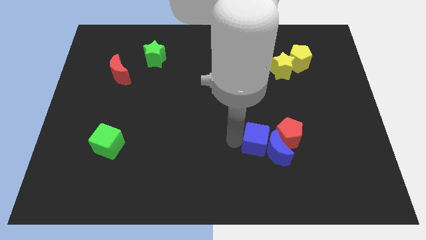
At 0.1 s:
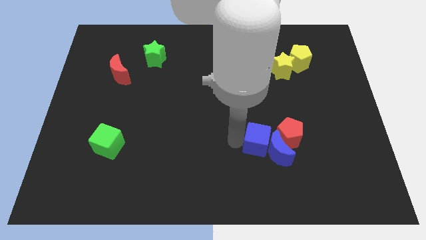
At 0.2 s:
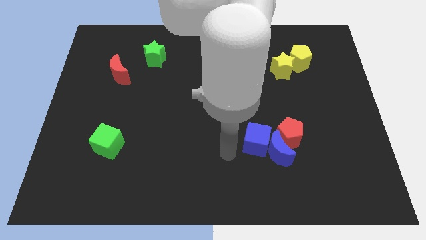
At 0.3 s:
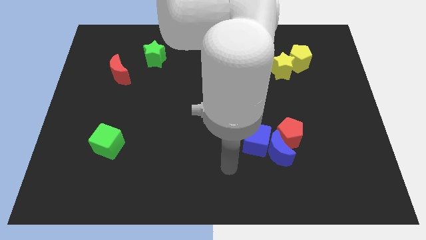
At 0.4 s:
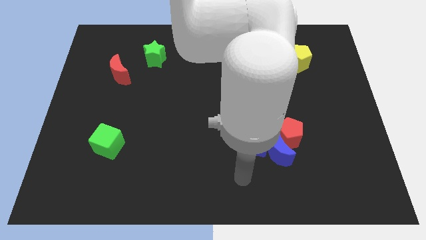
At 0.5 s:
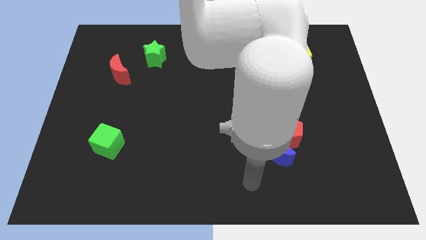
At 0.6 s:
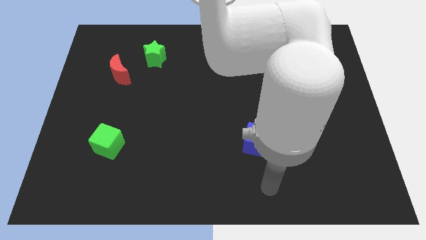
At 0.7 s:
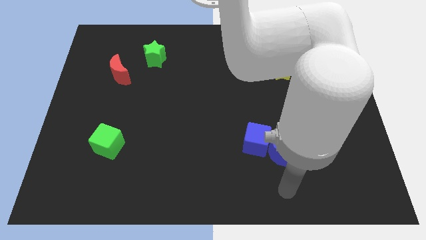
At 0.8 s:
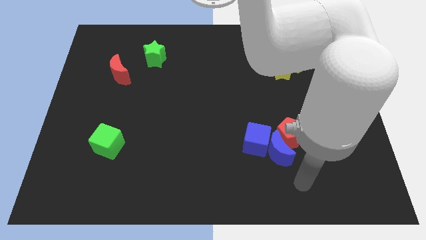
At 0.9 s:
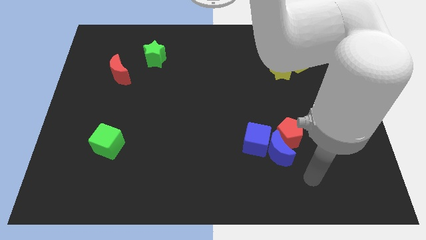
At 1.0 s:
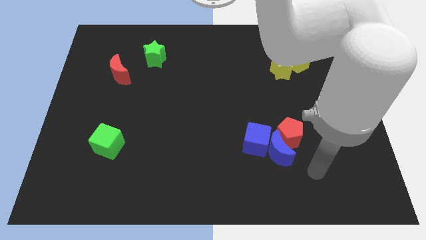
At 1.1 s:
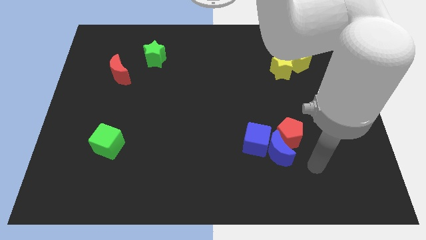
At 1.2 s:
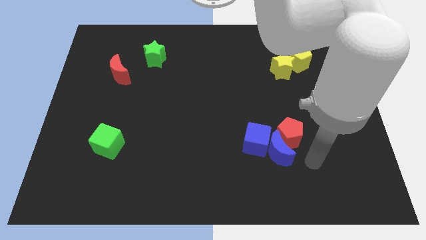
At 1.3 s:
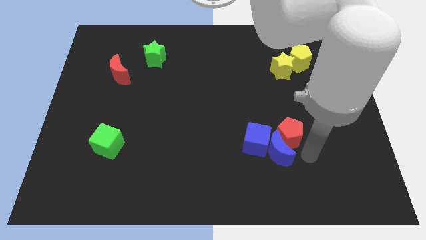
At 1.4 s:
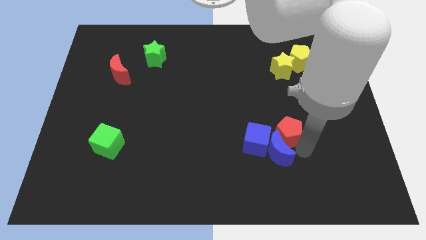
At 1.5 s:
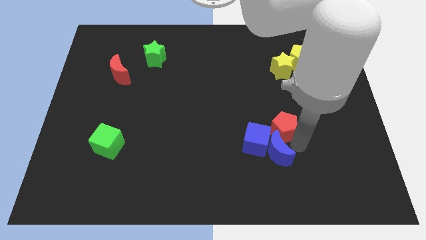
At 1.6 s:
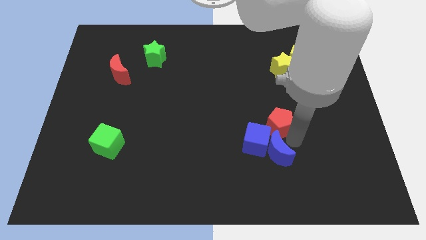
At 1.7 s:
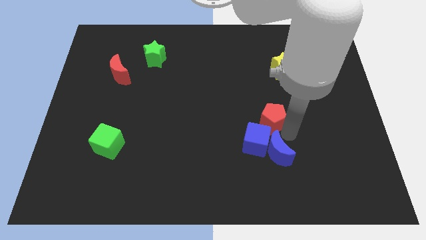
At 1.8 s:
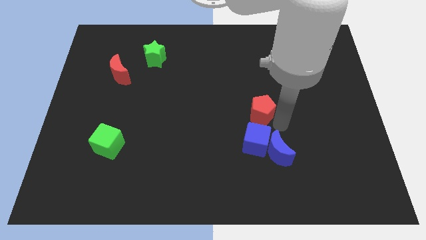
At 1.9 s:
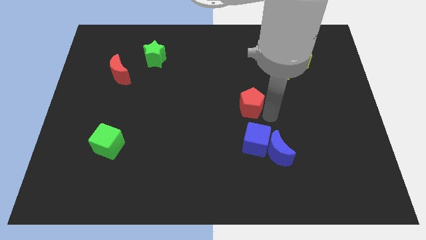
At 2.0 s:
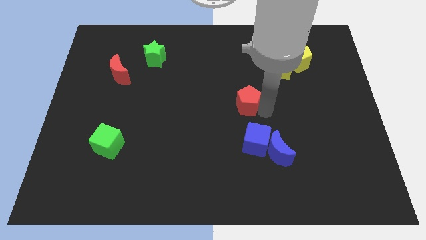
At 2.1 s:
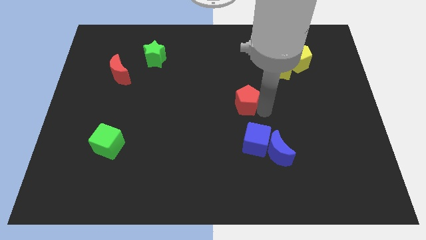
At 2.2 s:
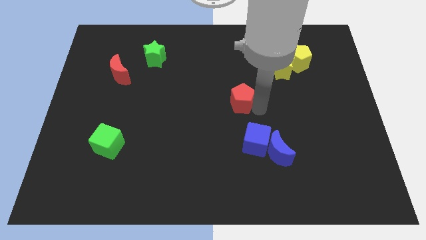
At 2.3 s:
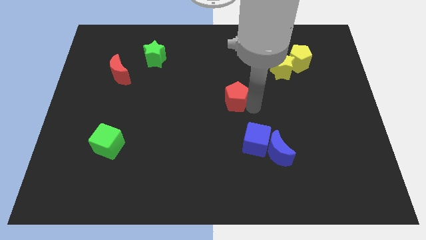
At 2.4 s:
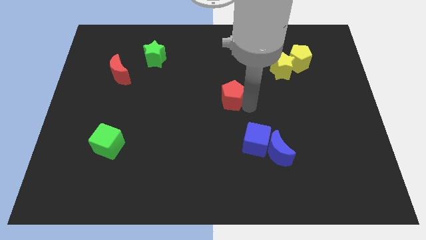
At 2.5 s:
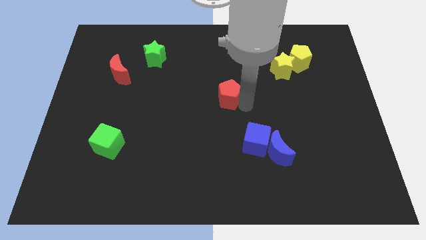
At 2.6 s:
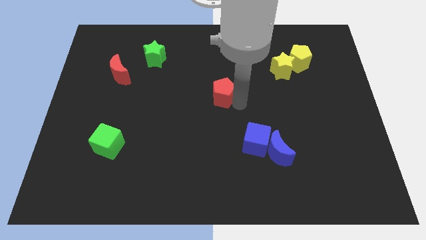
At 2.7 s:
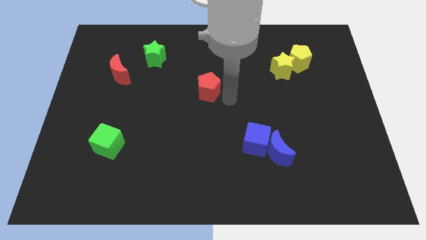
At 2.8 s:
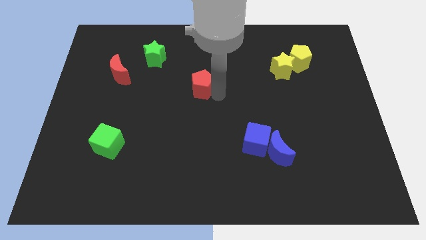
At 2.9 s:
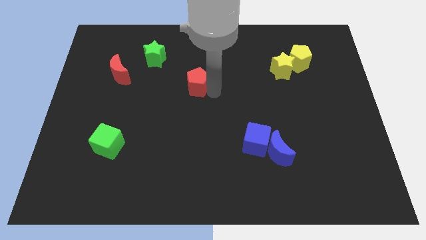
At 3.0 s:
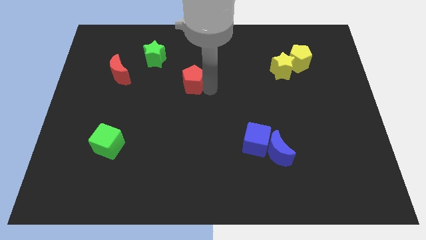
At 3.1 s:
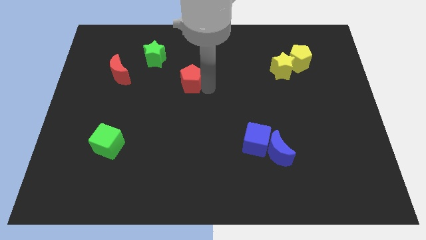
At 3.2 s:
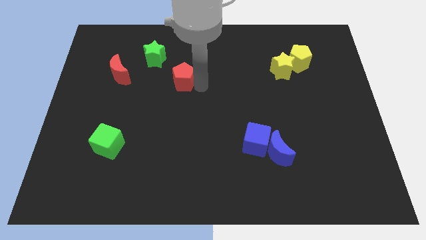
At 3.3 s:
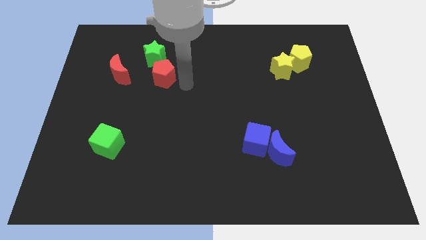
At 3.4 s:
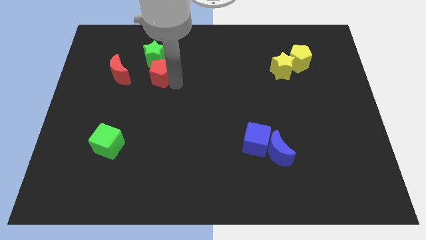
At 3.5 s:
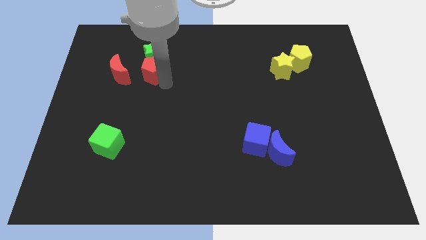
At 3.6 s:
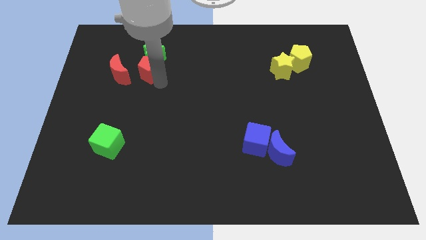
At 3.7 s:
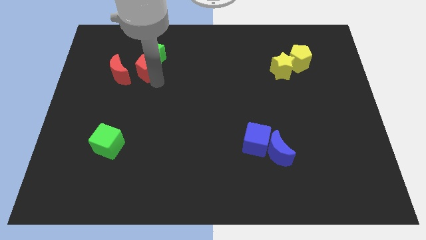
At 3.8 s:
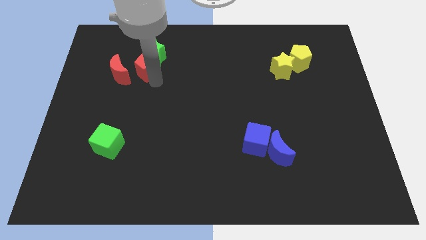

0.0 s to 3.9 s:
slide the red pentagon into the bottom side of the green star

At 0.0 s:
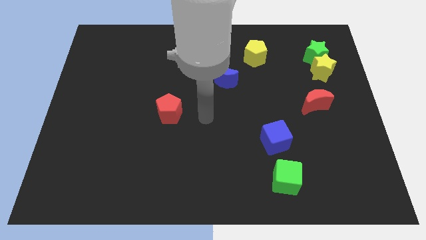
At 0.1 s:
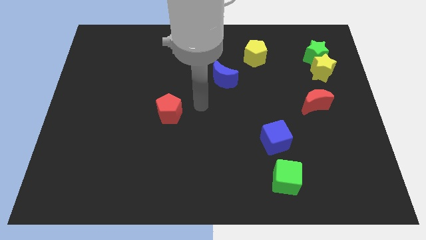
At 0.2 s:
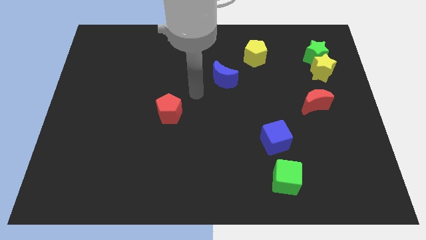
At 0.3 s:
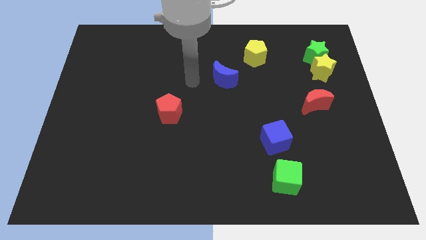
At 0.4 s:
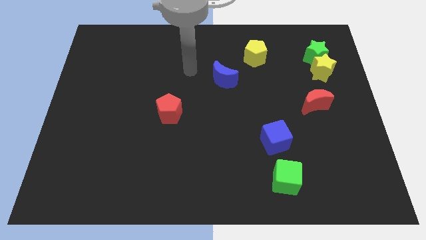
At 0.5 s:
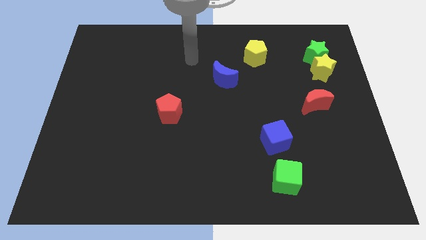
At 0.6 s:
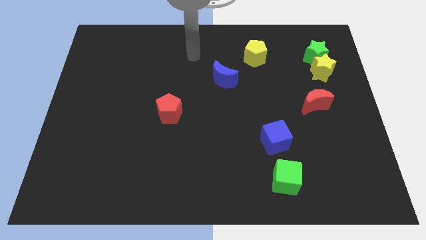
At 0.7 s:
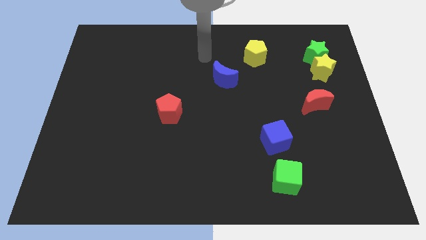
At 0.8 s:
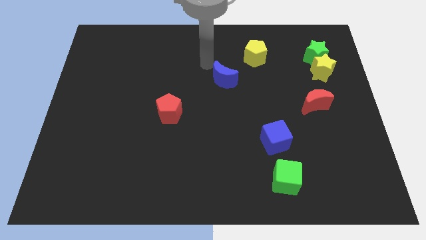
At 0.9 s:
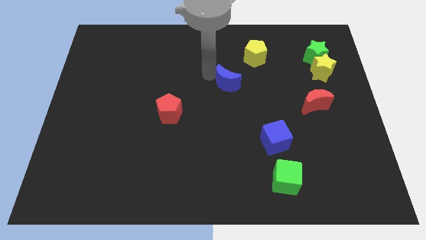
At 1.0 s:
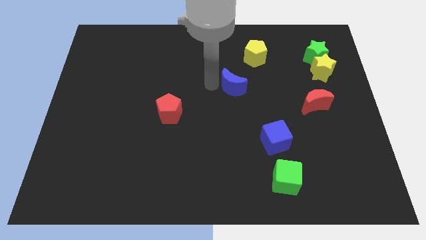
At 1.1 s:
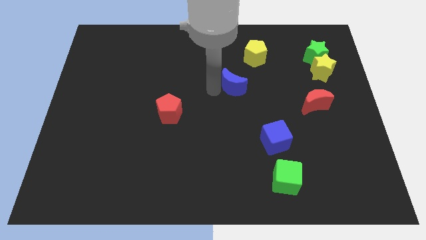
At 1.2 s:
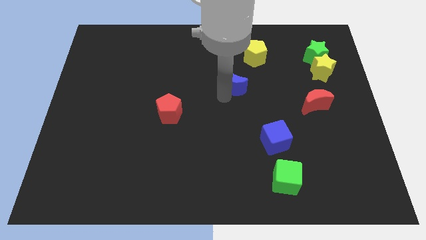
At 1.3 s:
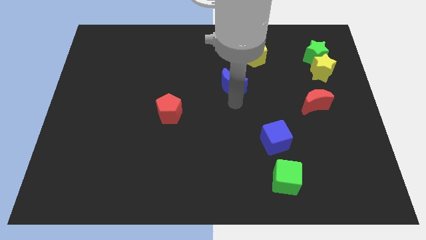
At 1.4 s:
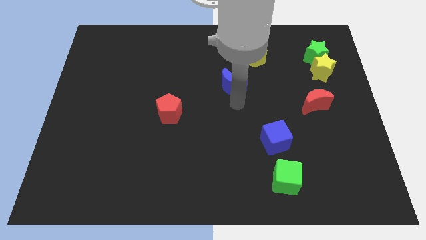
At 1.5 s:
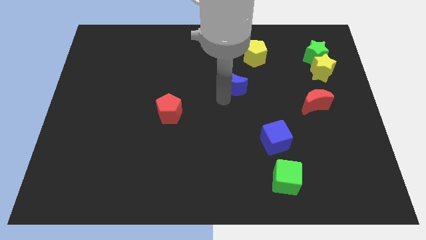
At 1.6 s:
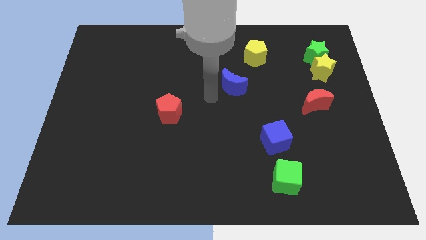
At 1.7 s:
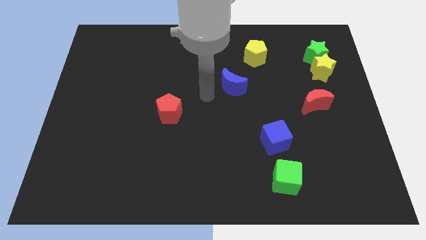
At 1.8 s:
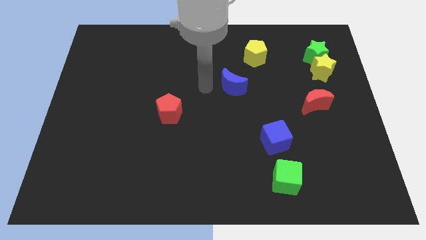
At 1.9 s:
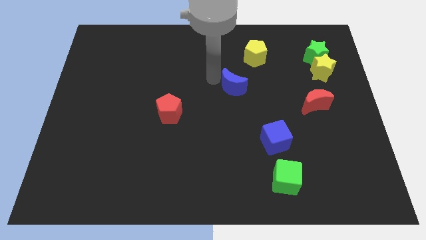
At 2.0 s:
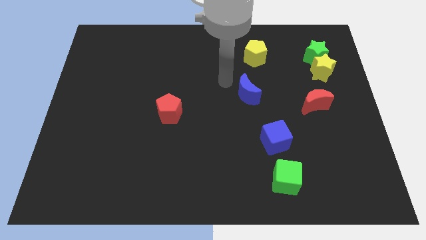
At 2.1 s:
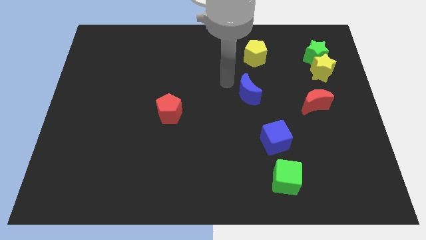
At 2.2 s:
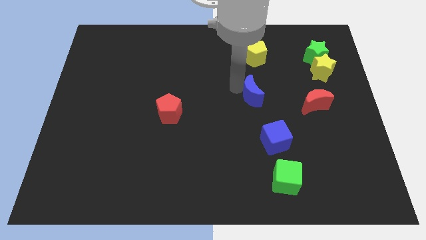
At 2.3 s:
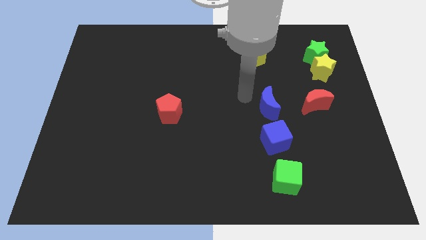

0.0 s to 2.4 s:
slightly move the blue crescent to the bottom a bit

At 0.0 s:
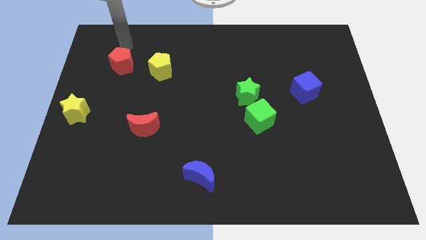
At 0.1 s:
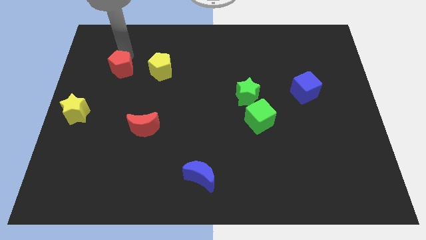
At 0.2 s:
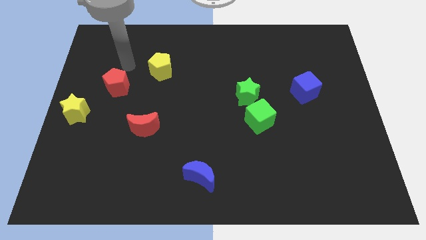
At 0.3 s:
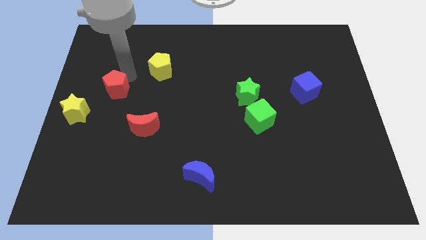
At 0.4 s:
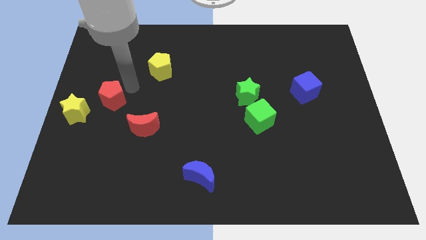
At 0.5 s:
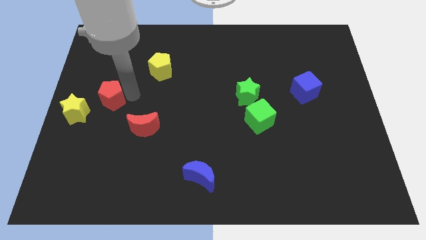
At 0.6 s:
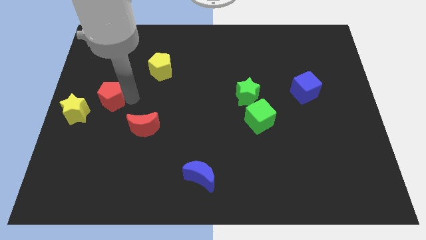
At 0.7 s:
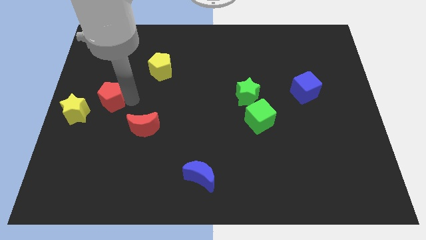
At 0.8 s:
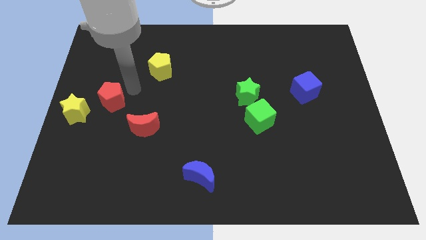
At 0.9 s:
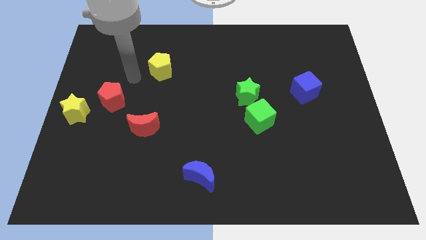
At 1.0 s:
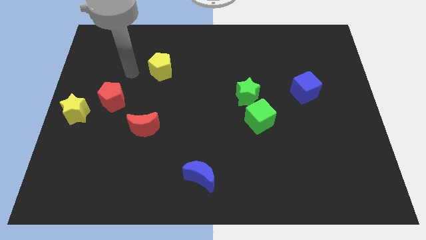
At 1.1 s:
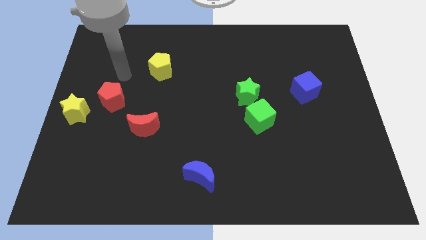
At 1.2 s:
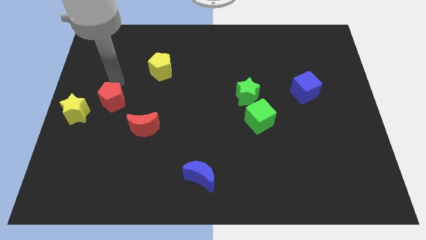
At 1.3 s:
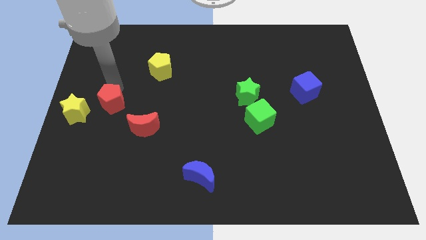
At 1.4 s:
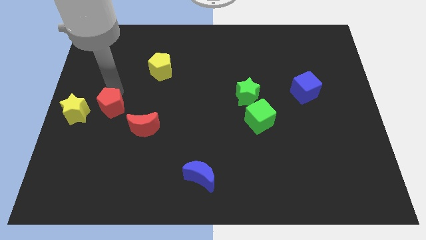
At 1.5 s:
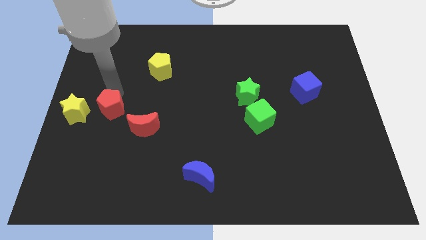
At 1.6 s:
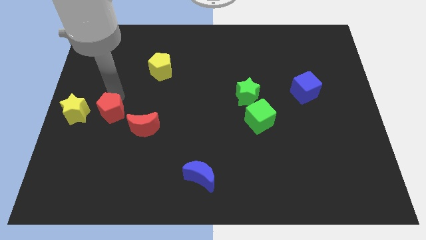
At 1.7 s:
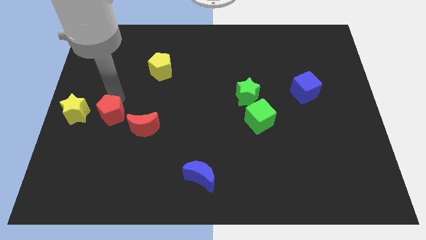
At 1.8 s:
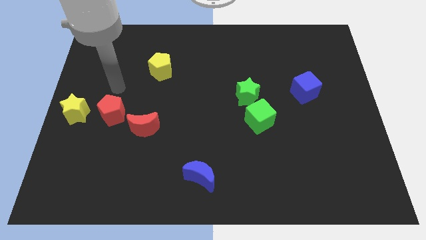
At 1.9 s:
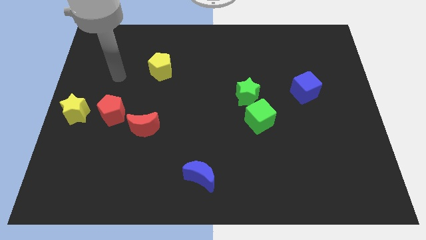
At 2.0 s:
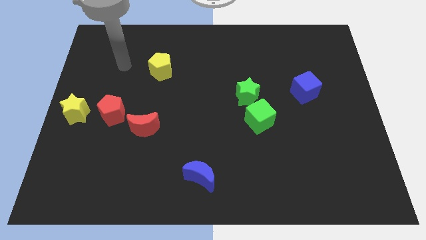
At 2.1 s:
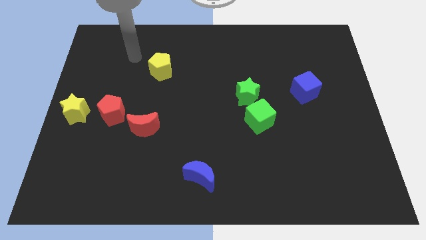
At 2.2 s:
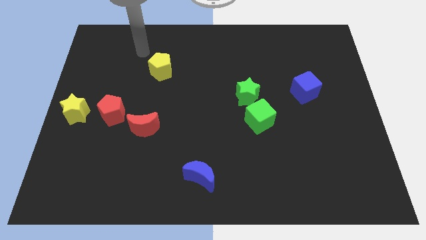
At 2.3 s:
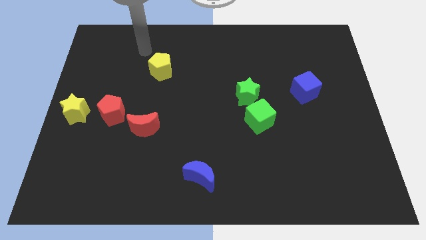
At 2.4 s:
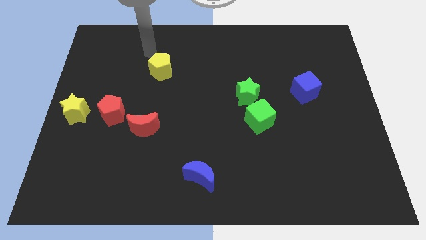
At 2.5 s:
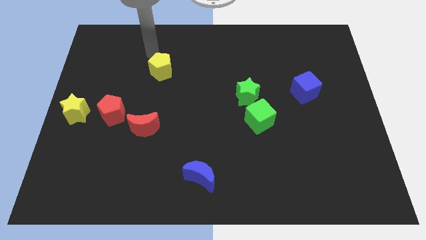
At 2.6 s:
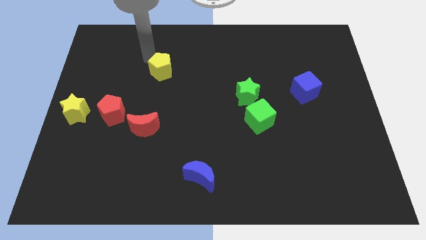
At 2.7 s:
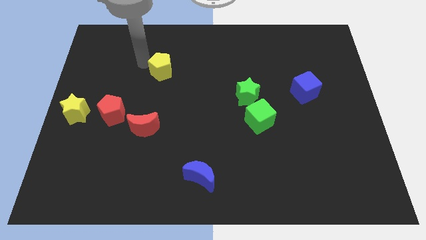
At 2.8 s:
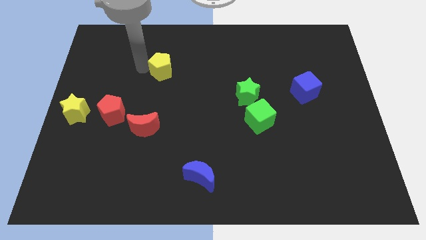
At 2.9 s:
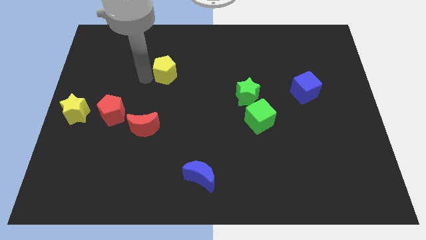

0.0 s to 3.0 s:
push yellow pentagon slightly towards down
